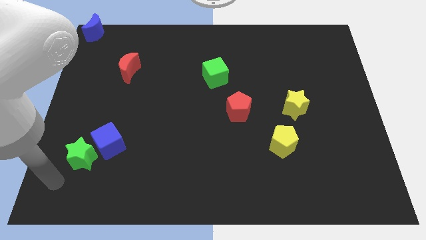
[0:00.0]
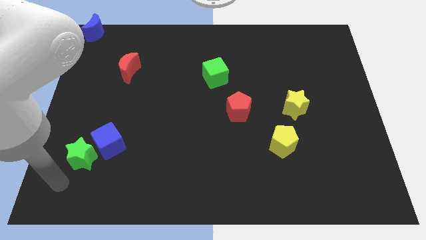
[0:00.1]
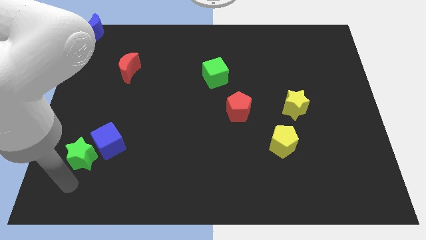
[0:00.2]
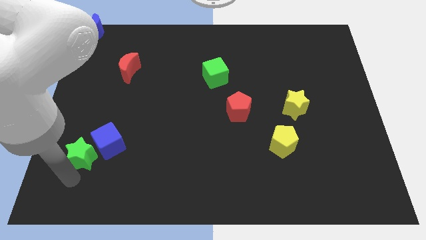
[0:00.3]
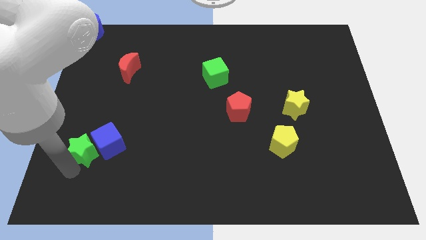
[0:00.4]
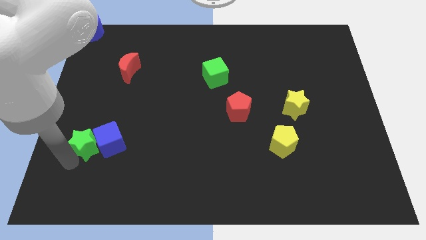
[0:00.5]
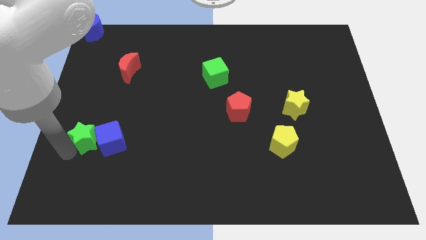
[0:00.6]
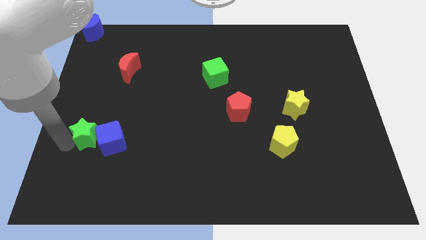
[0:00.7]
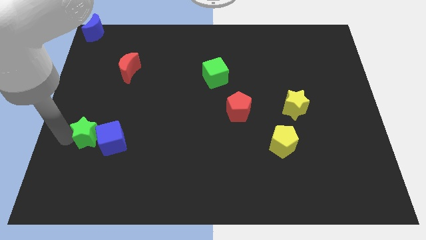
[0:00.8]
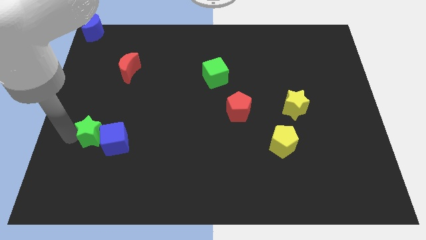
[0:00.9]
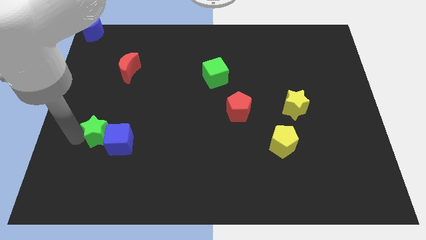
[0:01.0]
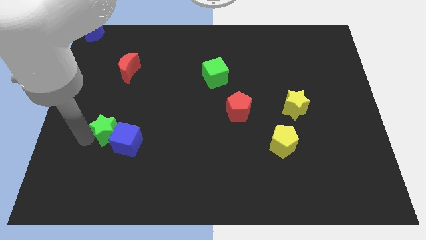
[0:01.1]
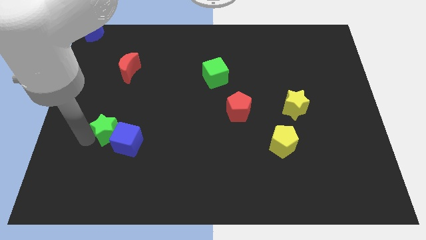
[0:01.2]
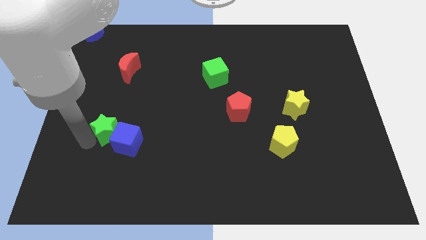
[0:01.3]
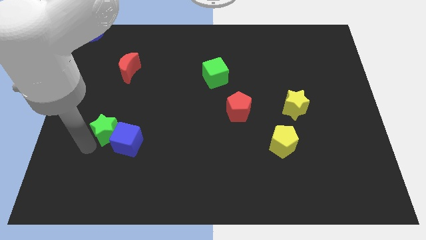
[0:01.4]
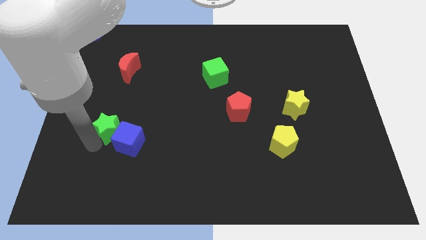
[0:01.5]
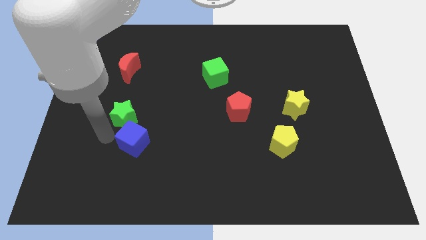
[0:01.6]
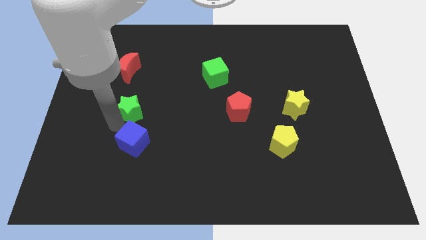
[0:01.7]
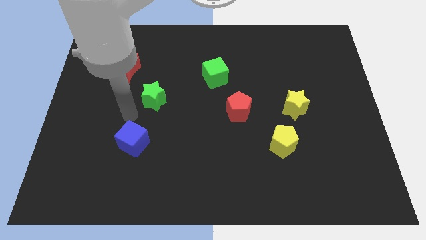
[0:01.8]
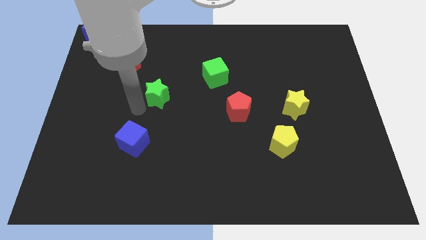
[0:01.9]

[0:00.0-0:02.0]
push the green star into the blue cube

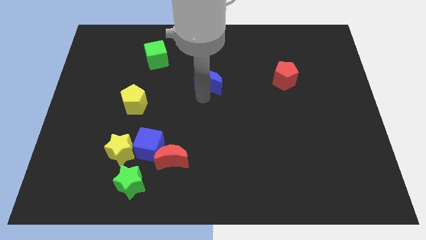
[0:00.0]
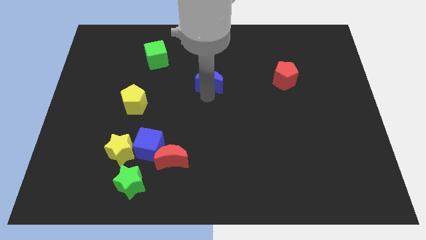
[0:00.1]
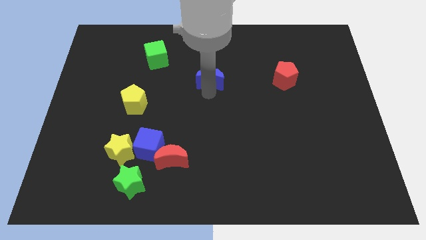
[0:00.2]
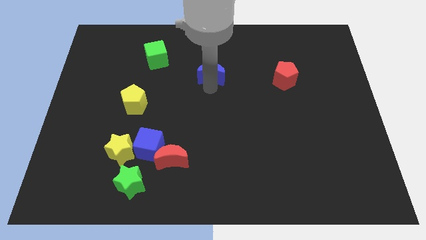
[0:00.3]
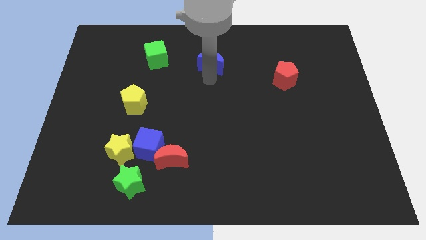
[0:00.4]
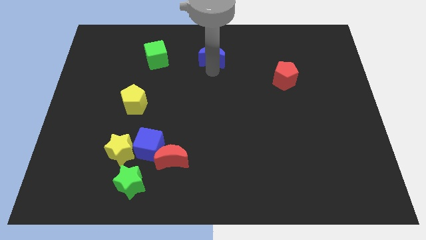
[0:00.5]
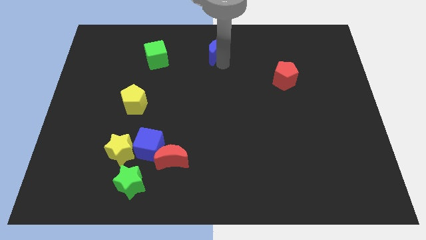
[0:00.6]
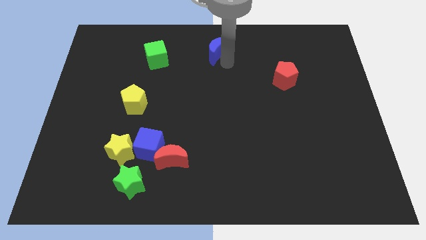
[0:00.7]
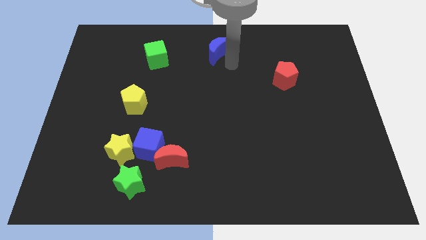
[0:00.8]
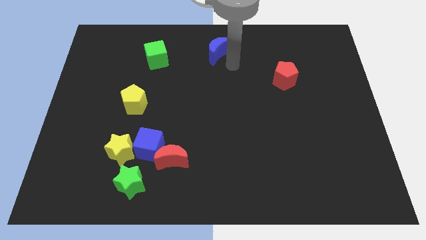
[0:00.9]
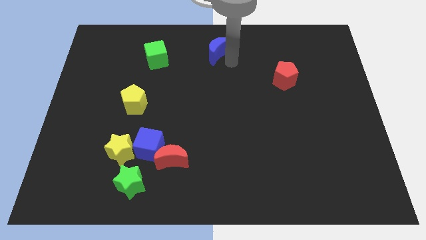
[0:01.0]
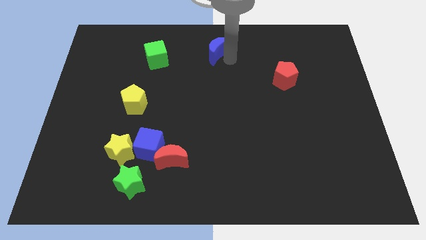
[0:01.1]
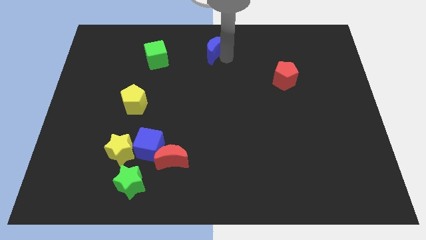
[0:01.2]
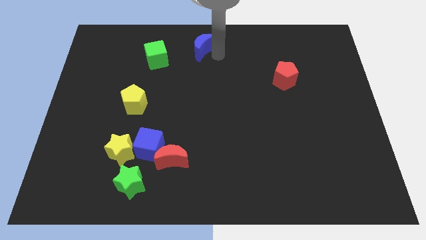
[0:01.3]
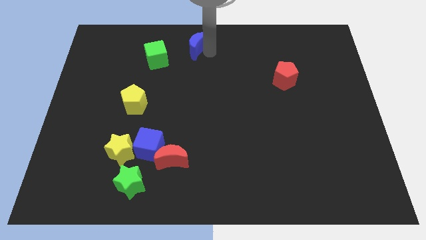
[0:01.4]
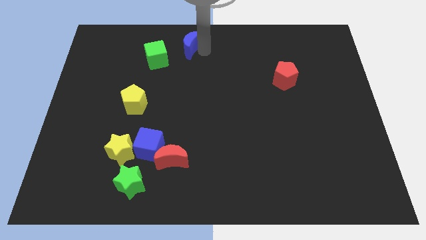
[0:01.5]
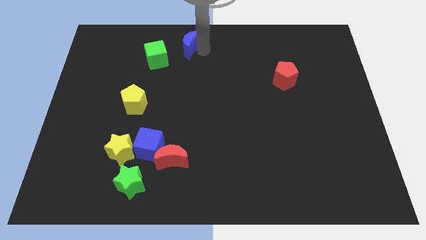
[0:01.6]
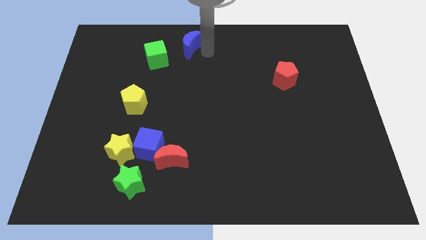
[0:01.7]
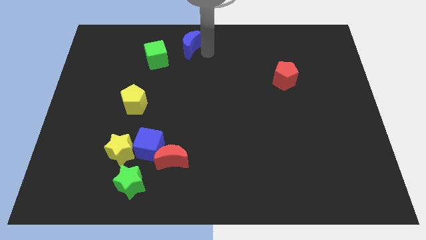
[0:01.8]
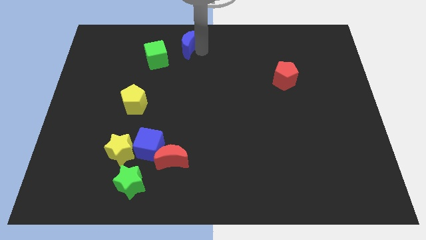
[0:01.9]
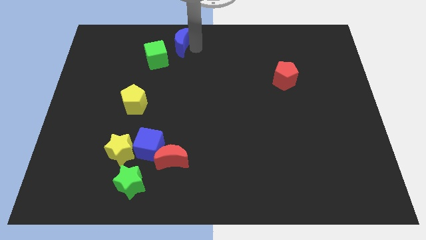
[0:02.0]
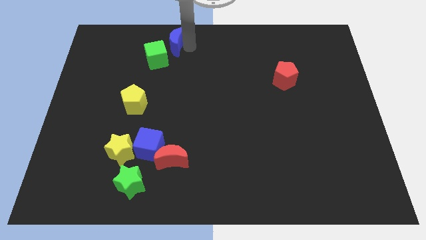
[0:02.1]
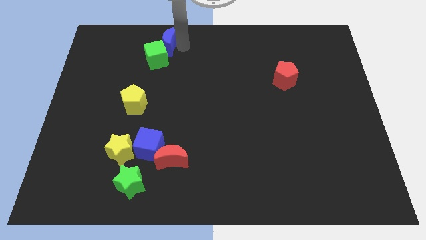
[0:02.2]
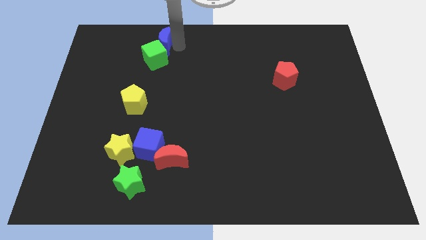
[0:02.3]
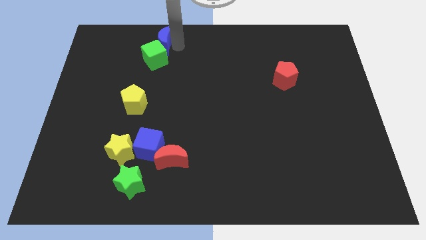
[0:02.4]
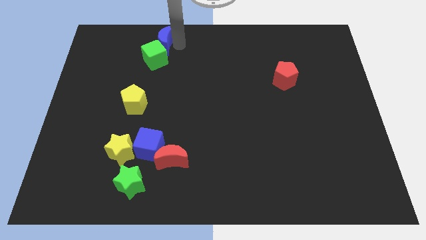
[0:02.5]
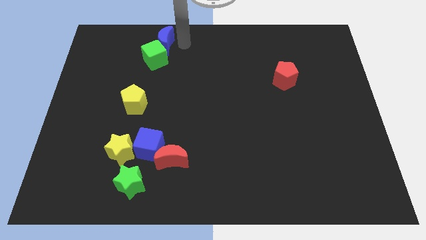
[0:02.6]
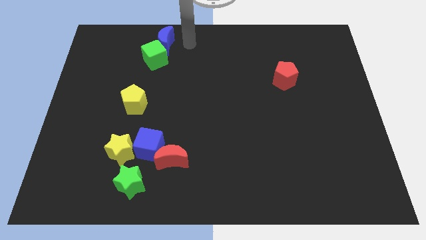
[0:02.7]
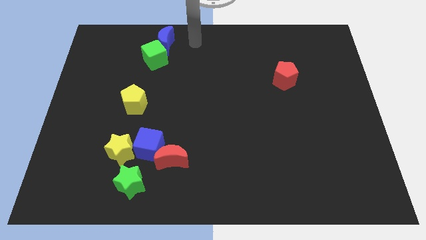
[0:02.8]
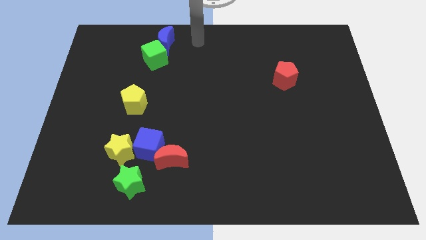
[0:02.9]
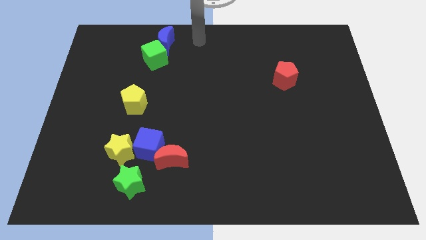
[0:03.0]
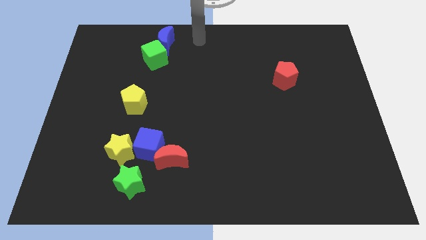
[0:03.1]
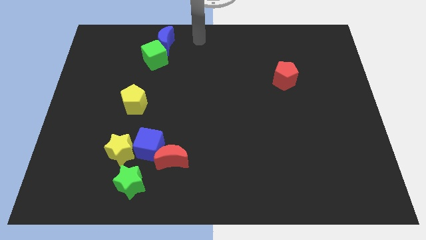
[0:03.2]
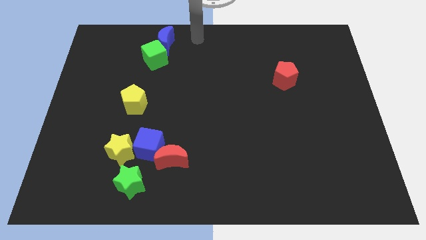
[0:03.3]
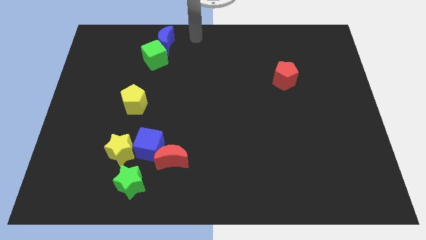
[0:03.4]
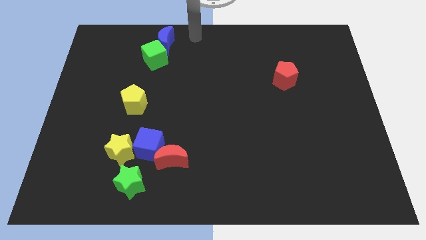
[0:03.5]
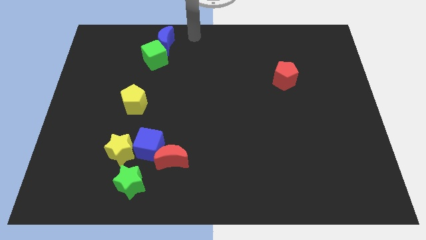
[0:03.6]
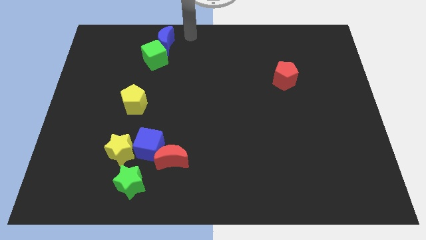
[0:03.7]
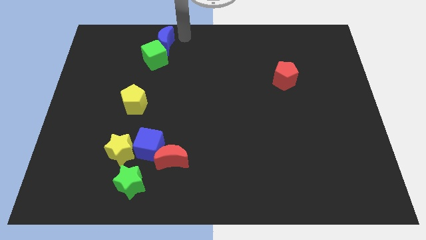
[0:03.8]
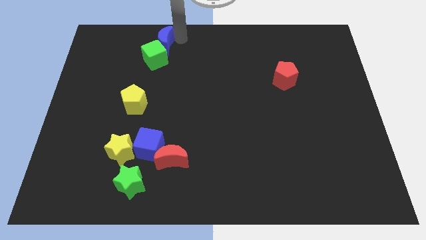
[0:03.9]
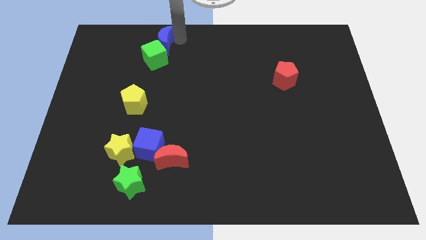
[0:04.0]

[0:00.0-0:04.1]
move blue moon above the green cube

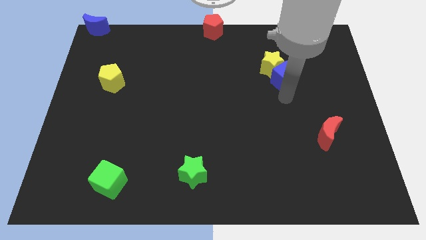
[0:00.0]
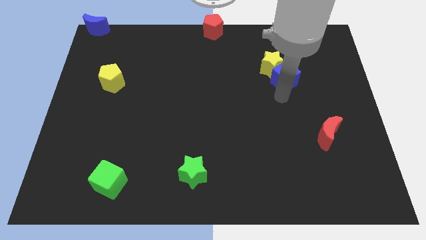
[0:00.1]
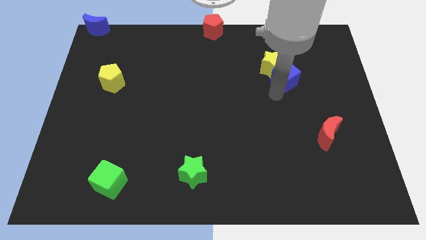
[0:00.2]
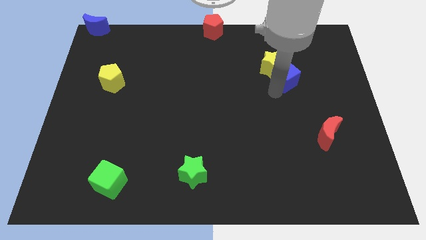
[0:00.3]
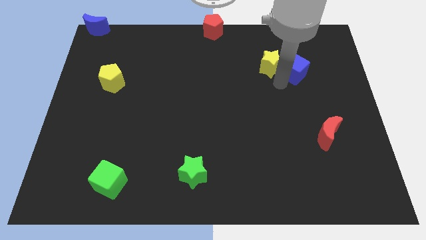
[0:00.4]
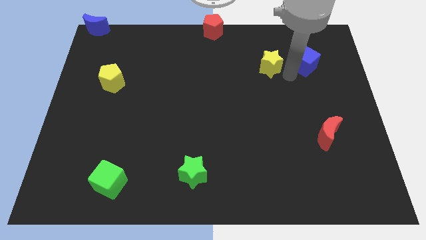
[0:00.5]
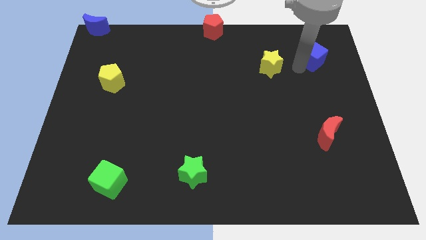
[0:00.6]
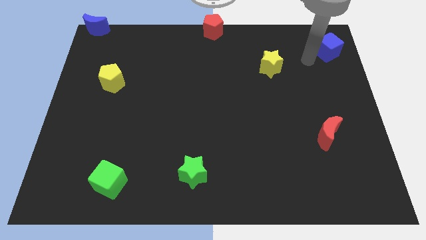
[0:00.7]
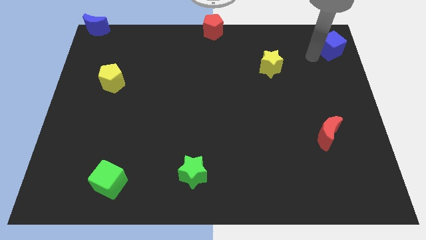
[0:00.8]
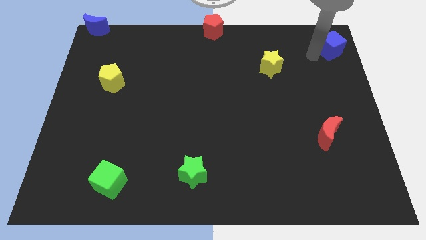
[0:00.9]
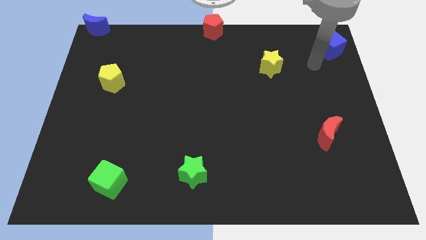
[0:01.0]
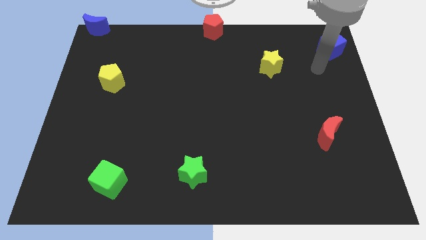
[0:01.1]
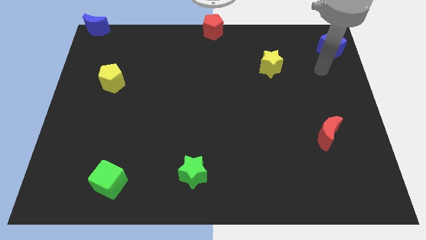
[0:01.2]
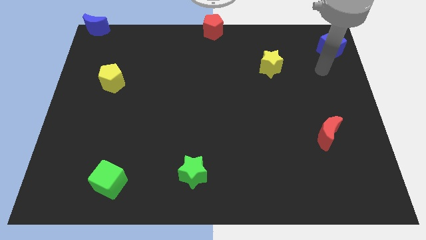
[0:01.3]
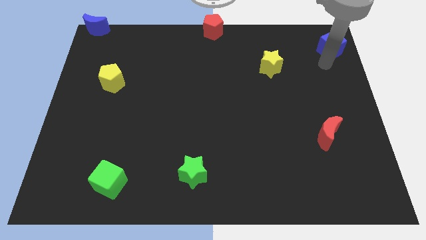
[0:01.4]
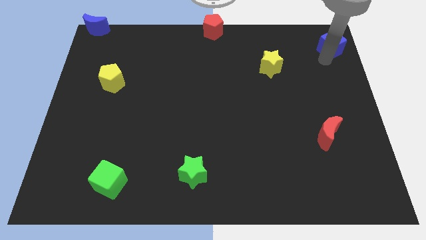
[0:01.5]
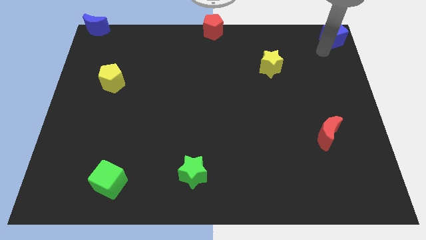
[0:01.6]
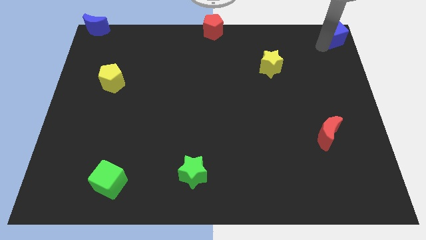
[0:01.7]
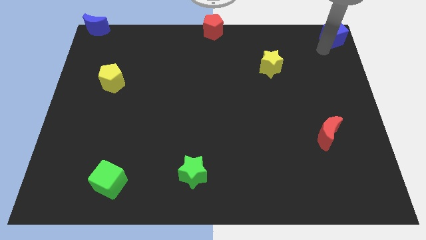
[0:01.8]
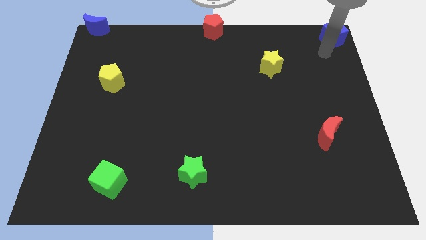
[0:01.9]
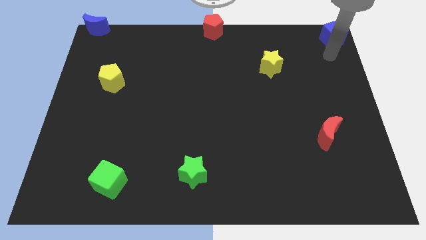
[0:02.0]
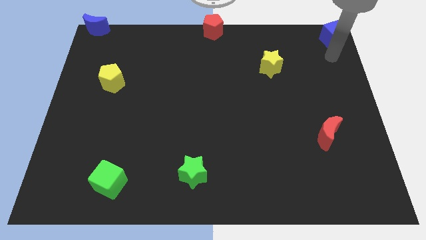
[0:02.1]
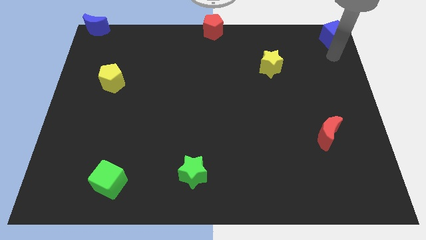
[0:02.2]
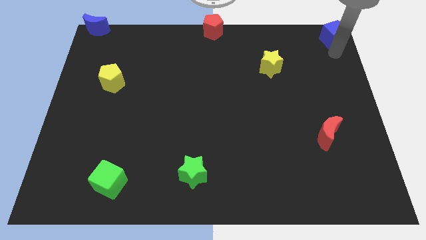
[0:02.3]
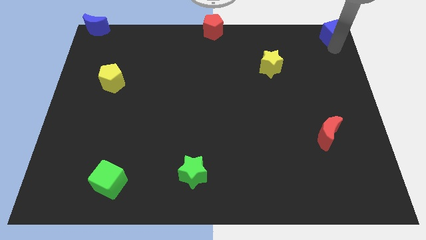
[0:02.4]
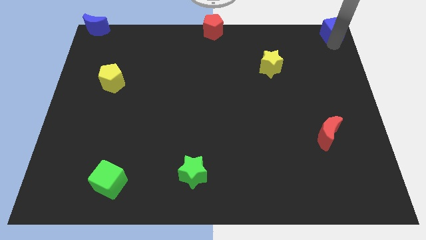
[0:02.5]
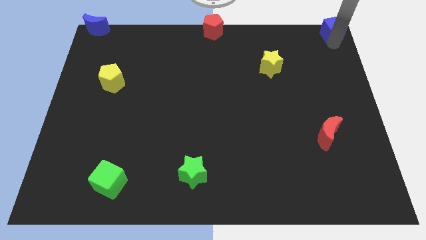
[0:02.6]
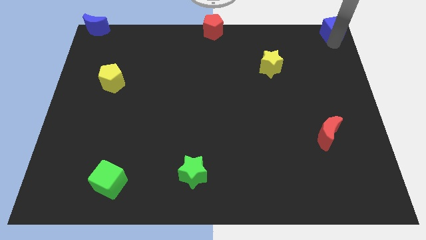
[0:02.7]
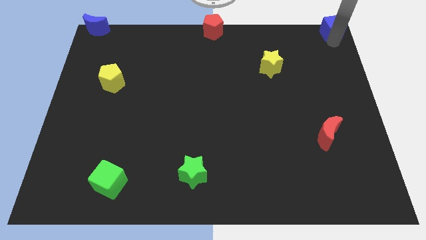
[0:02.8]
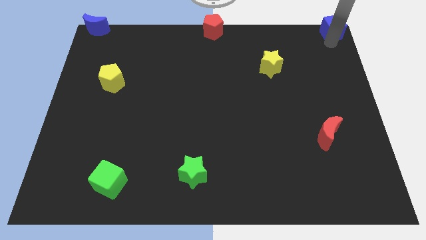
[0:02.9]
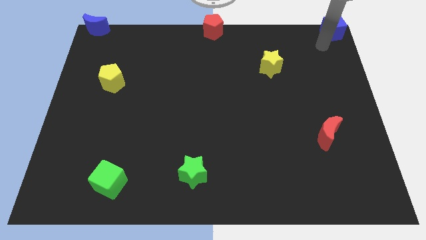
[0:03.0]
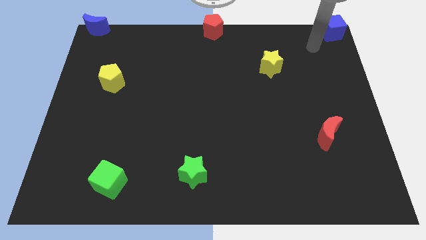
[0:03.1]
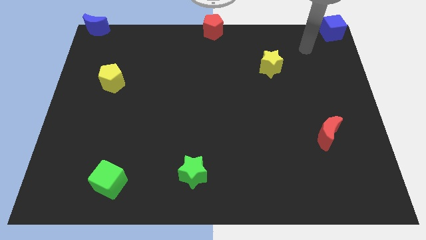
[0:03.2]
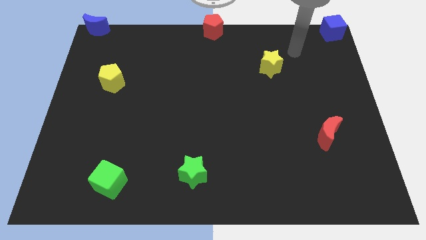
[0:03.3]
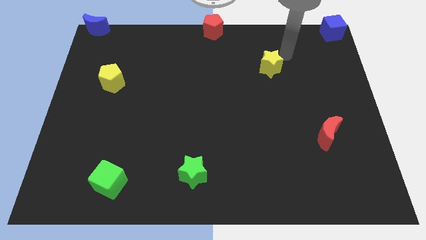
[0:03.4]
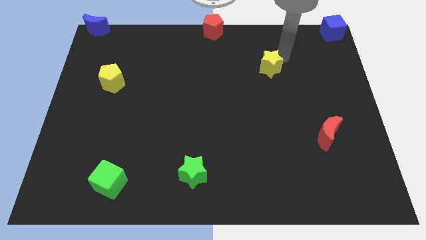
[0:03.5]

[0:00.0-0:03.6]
place blue cube to the top right corner of the board
